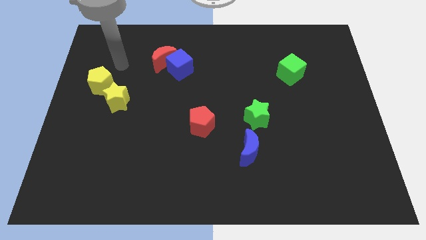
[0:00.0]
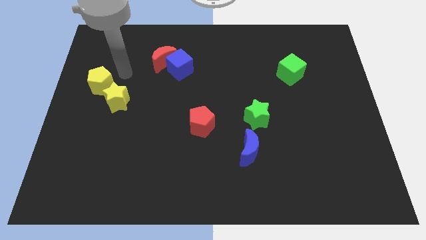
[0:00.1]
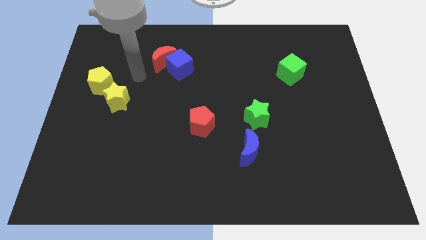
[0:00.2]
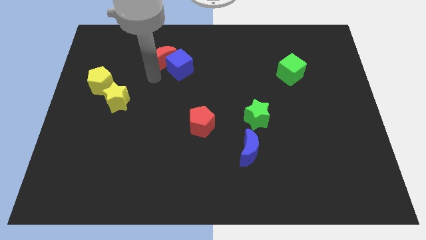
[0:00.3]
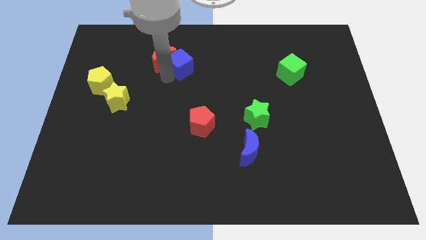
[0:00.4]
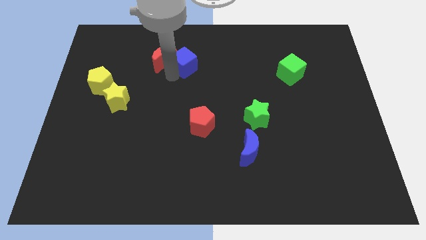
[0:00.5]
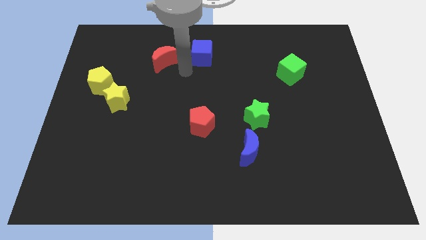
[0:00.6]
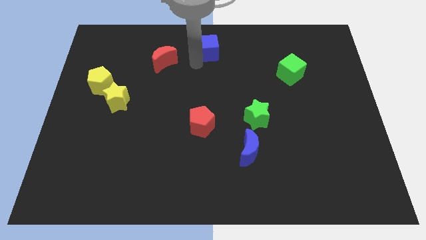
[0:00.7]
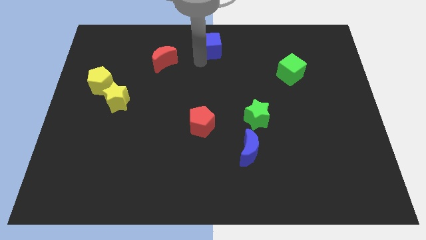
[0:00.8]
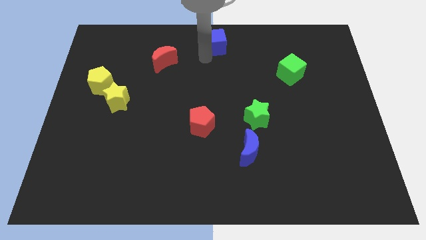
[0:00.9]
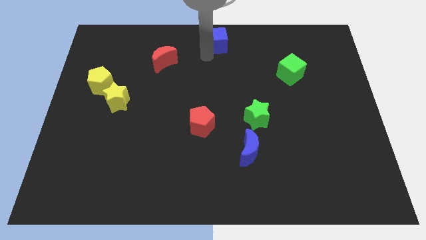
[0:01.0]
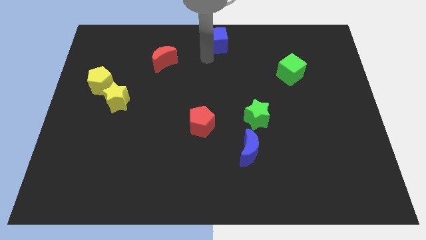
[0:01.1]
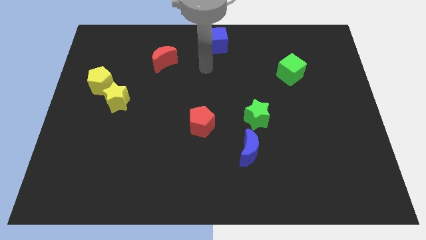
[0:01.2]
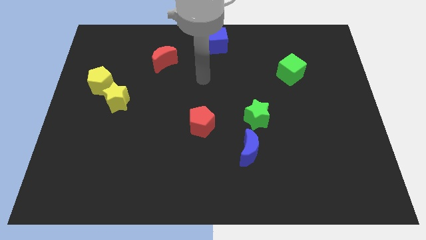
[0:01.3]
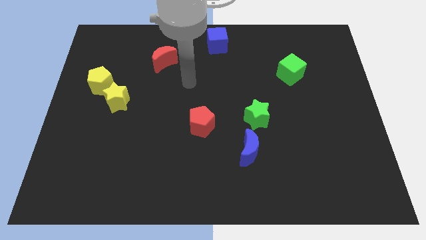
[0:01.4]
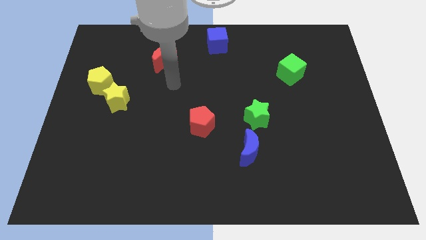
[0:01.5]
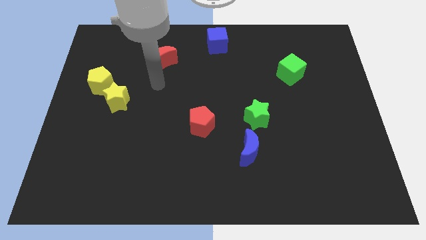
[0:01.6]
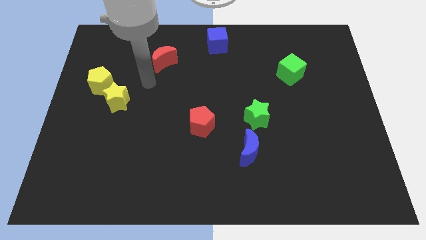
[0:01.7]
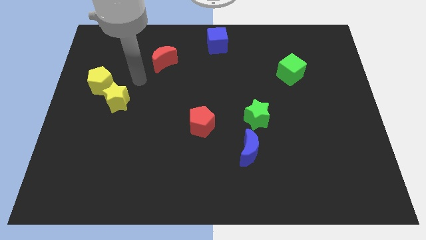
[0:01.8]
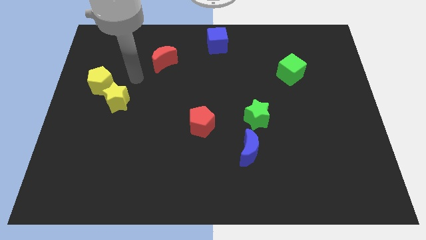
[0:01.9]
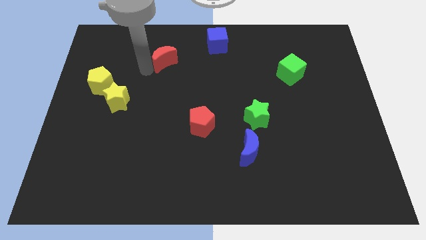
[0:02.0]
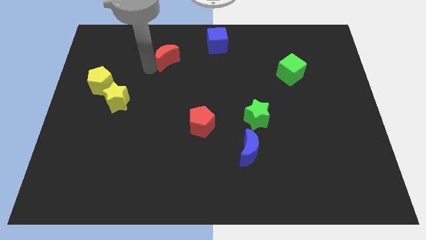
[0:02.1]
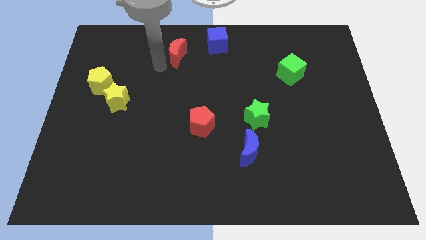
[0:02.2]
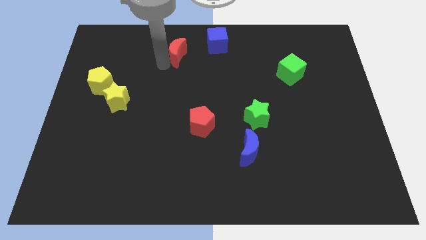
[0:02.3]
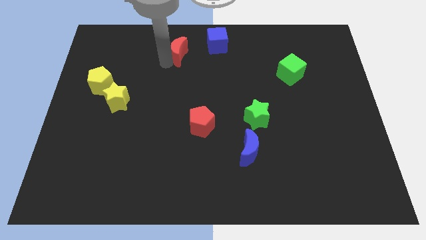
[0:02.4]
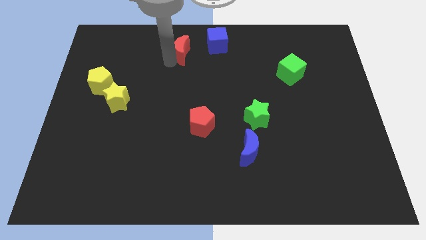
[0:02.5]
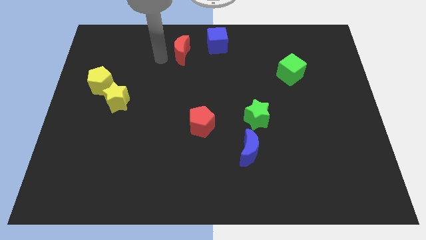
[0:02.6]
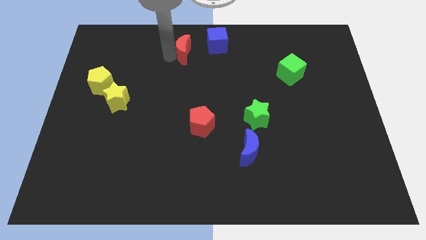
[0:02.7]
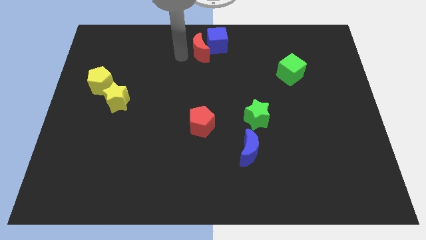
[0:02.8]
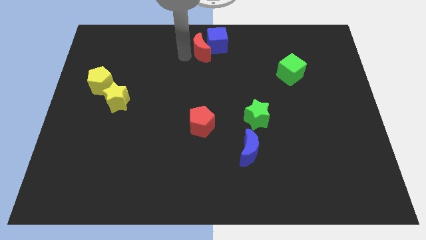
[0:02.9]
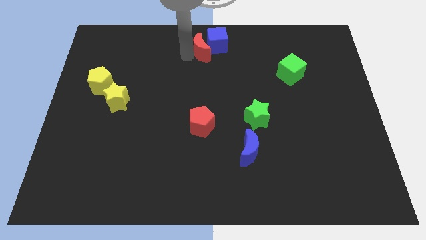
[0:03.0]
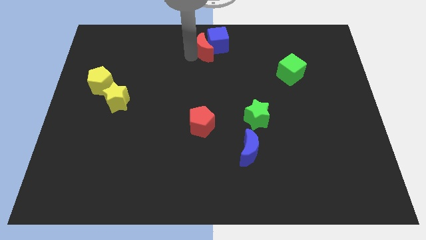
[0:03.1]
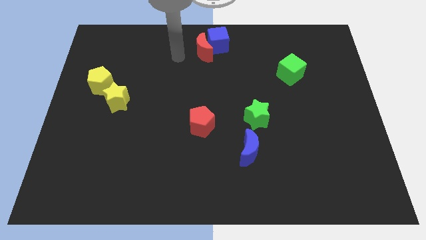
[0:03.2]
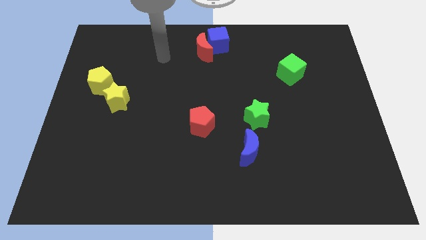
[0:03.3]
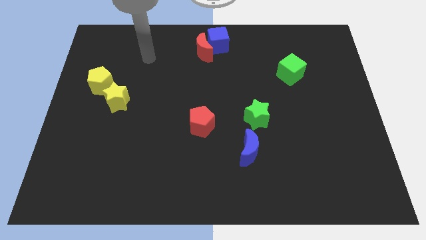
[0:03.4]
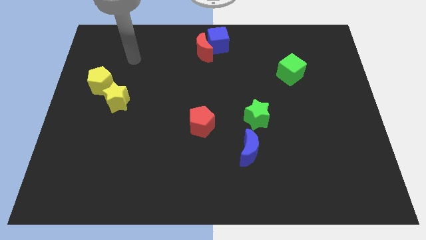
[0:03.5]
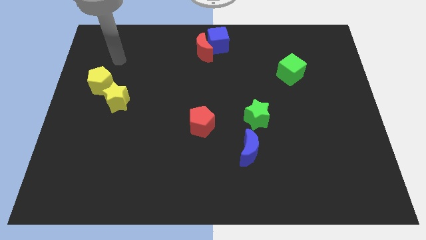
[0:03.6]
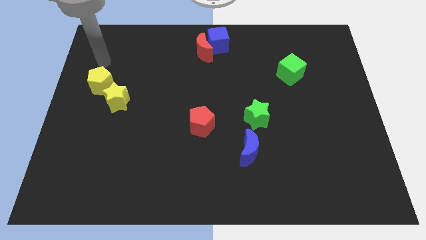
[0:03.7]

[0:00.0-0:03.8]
move blue cube to the top center simultaneously touch blue cube with red crescent

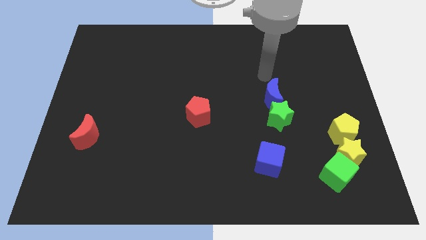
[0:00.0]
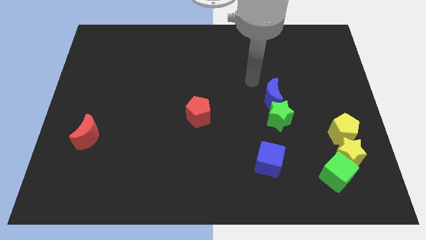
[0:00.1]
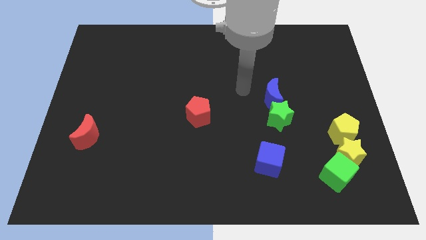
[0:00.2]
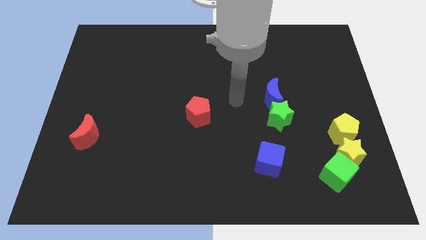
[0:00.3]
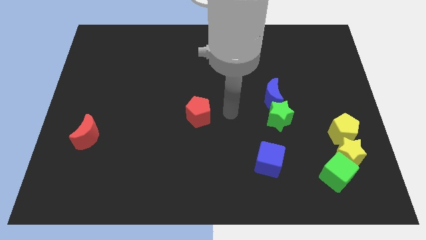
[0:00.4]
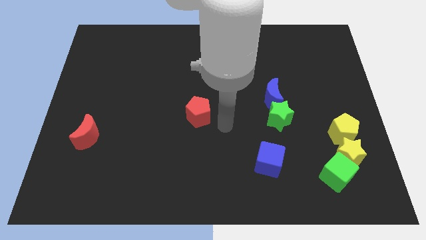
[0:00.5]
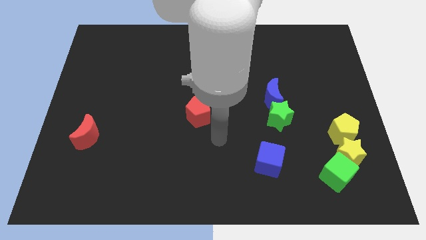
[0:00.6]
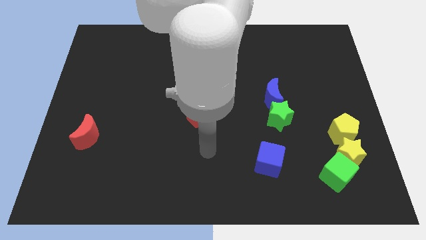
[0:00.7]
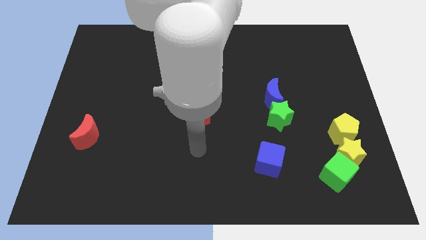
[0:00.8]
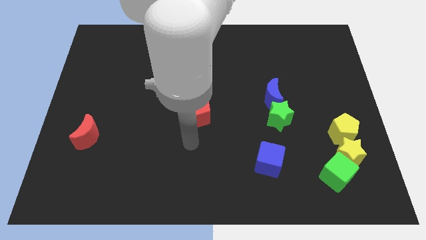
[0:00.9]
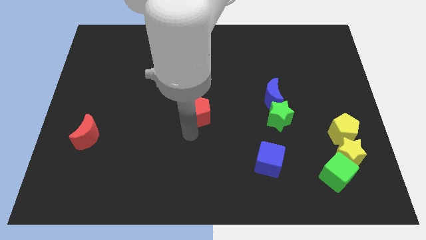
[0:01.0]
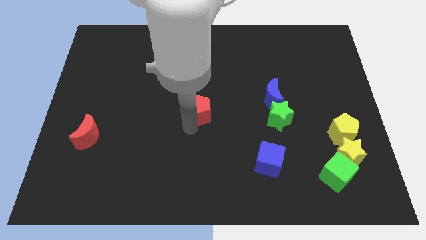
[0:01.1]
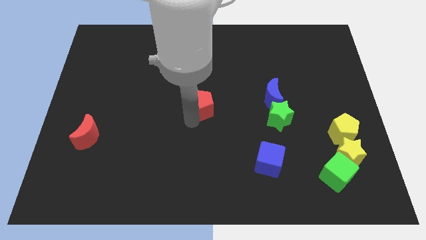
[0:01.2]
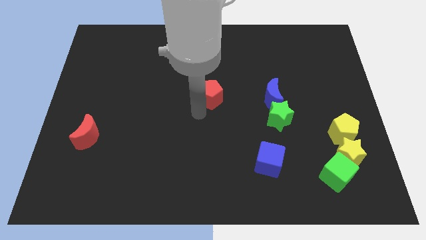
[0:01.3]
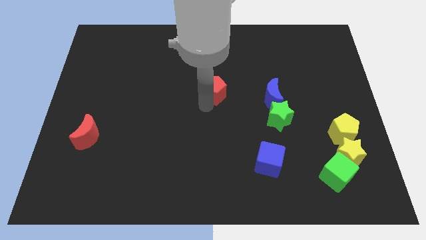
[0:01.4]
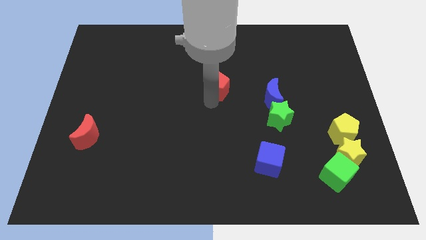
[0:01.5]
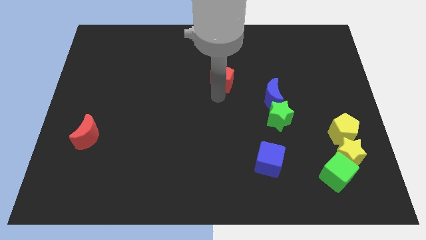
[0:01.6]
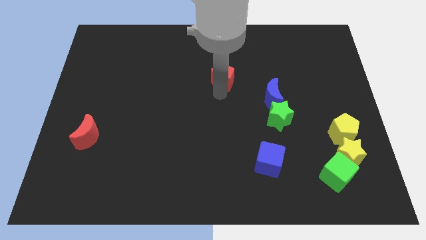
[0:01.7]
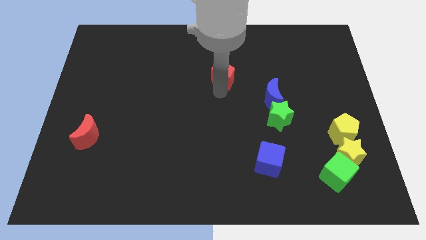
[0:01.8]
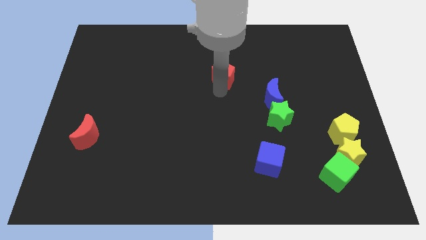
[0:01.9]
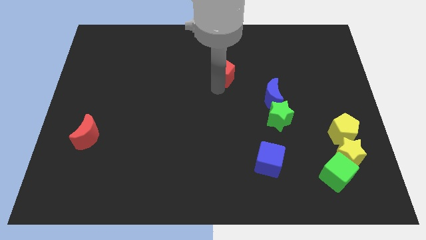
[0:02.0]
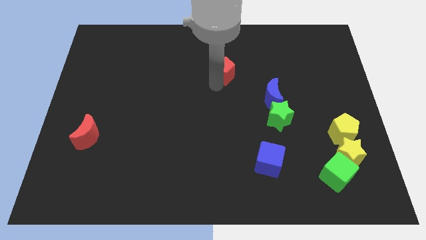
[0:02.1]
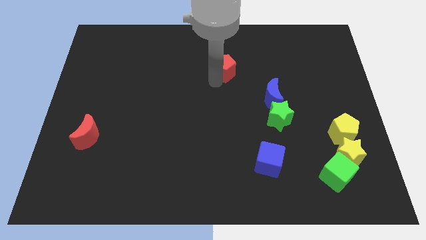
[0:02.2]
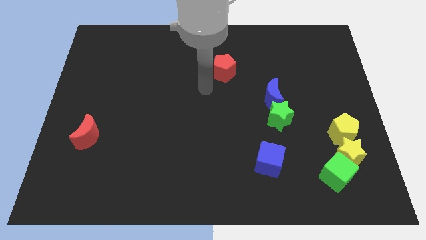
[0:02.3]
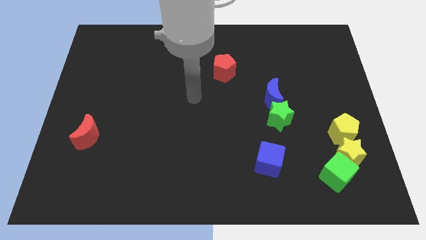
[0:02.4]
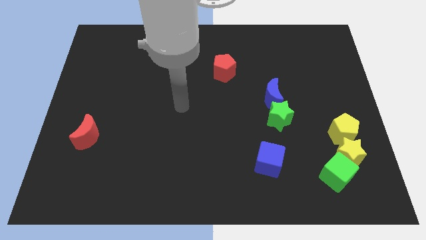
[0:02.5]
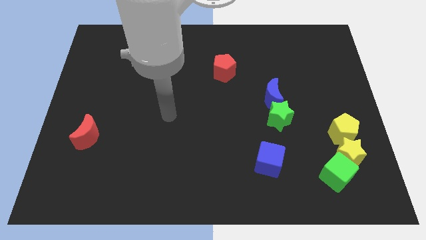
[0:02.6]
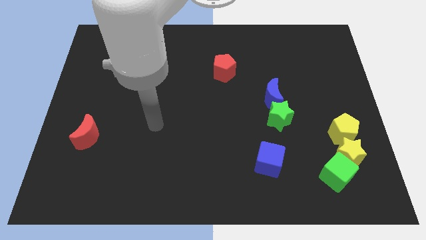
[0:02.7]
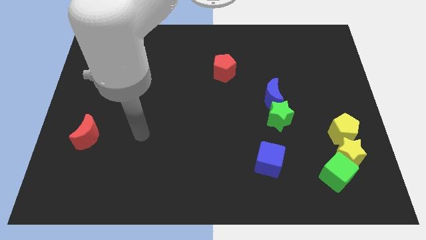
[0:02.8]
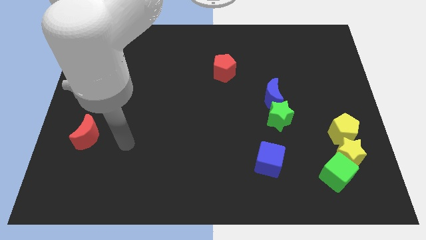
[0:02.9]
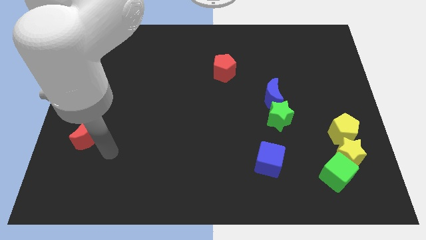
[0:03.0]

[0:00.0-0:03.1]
push the red pentagon towards the top center of the board

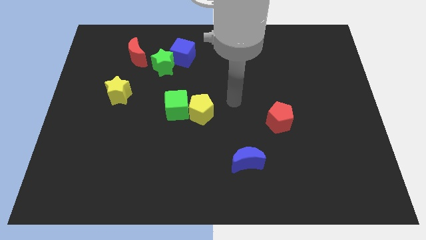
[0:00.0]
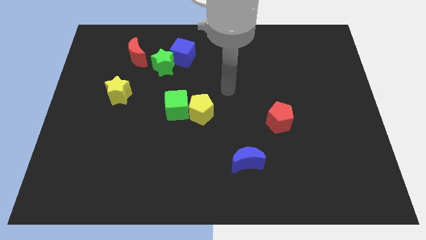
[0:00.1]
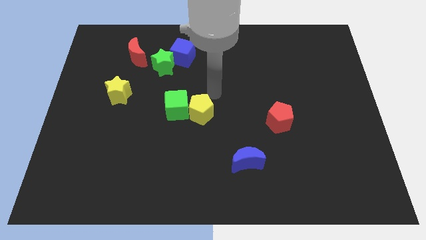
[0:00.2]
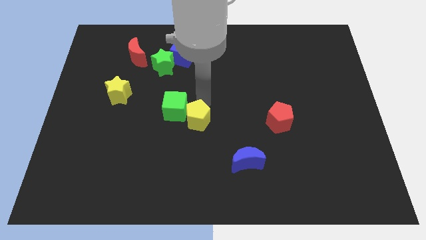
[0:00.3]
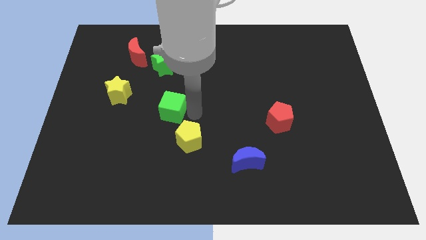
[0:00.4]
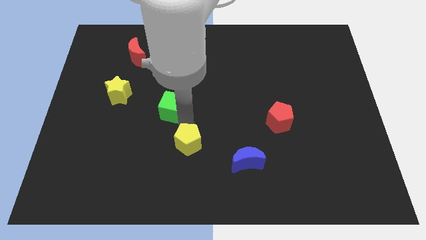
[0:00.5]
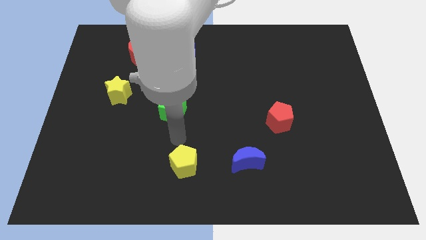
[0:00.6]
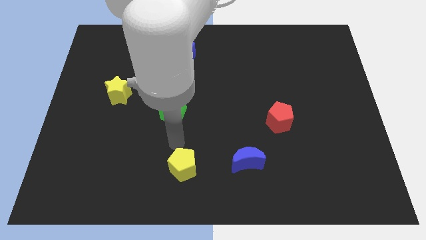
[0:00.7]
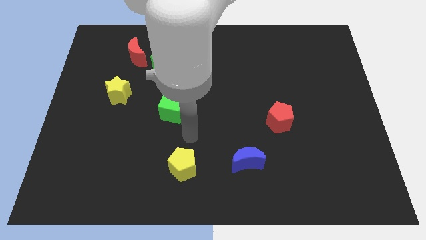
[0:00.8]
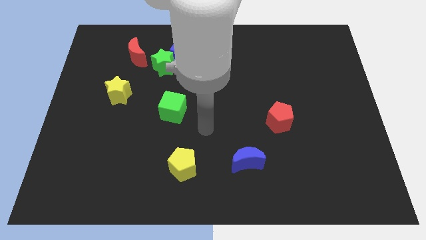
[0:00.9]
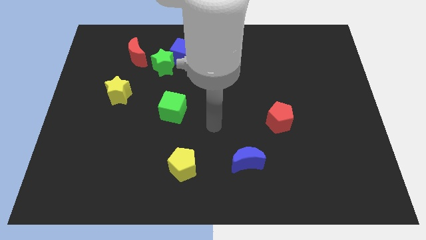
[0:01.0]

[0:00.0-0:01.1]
separate yellow pentagon from green cube

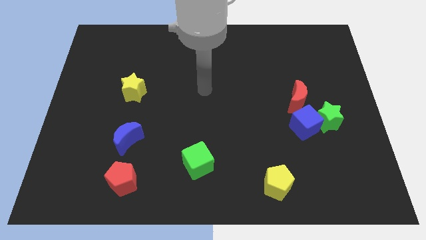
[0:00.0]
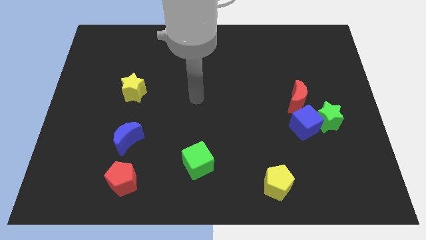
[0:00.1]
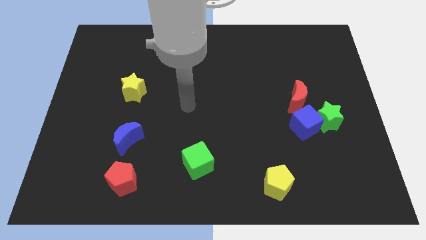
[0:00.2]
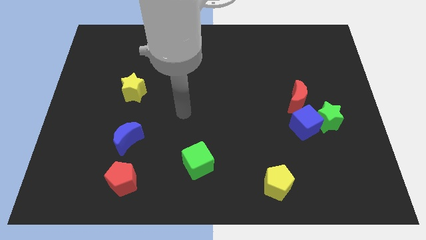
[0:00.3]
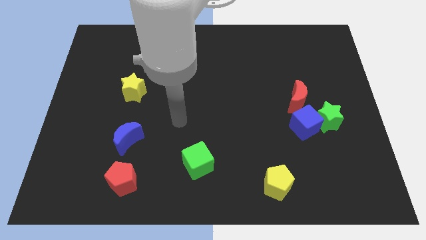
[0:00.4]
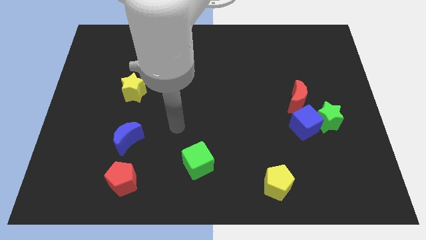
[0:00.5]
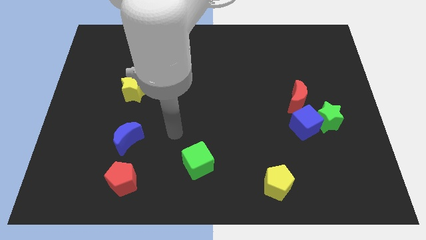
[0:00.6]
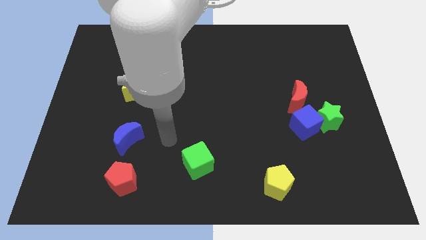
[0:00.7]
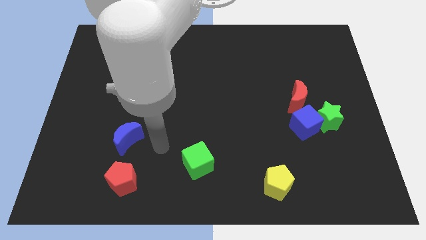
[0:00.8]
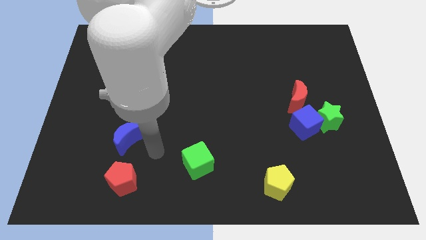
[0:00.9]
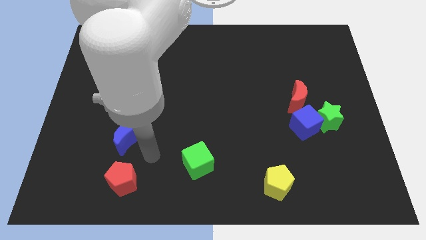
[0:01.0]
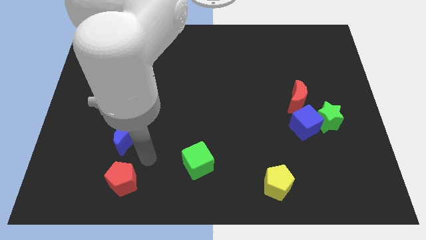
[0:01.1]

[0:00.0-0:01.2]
move the arm towards the red pentagon
